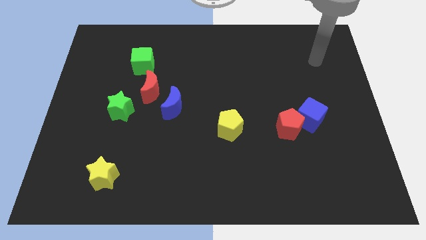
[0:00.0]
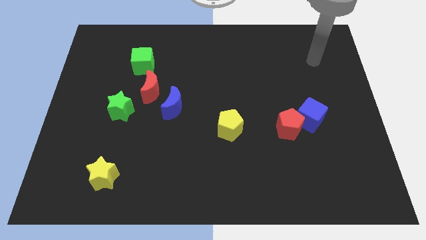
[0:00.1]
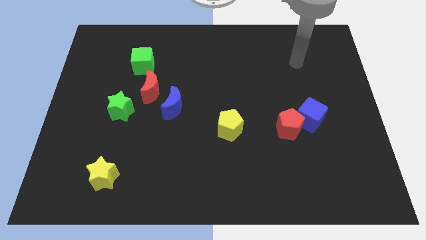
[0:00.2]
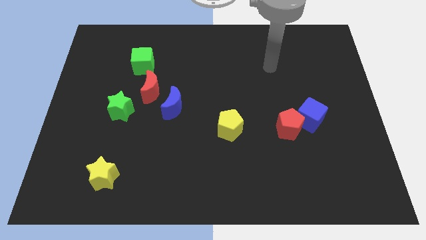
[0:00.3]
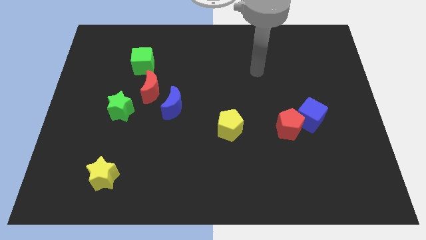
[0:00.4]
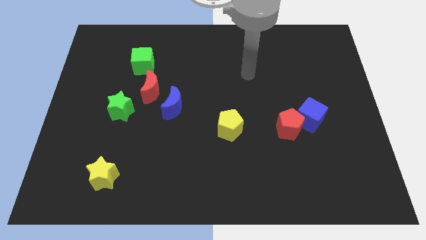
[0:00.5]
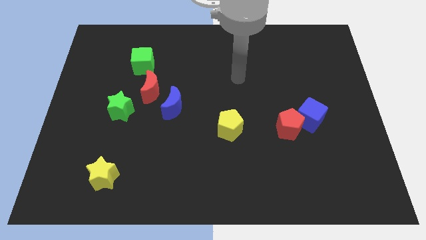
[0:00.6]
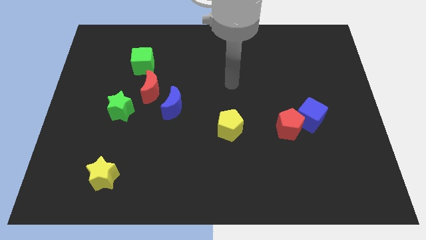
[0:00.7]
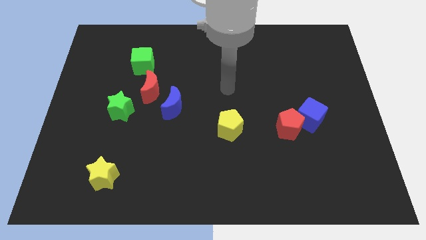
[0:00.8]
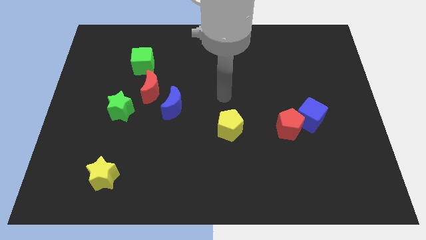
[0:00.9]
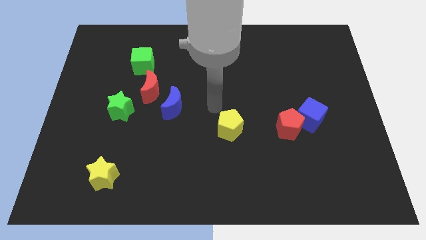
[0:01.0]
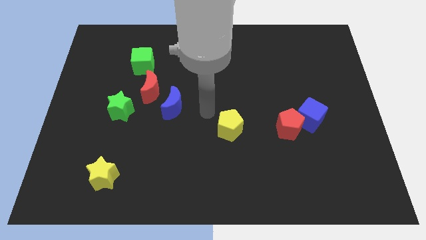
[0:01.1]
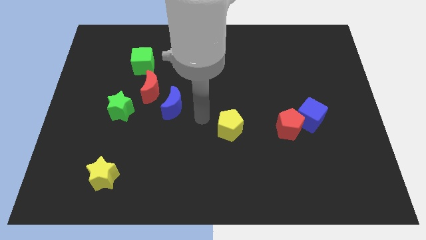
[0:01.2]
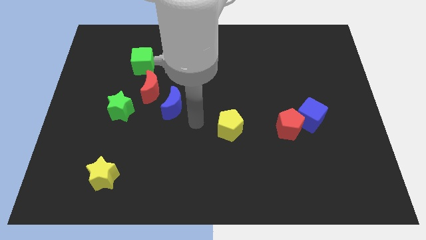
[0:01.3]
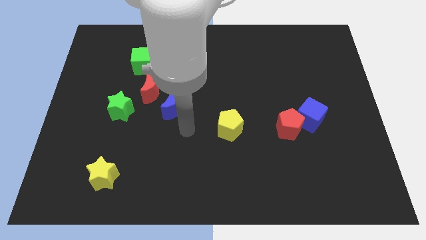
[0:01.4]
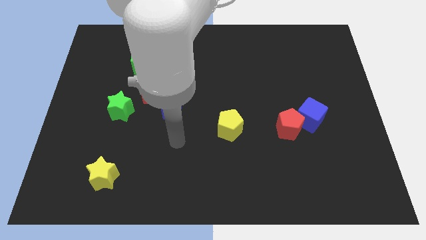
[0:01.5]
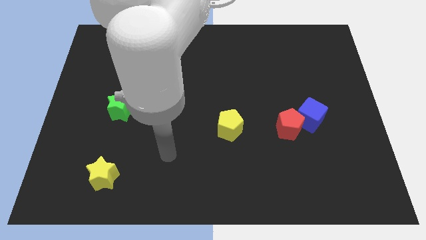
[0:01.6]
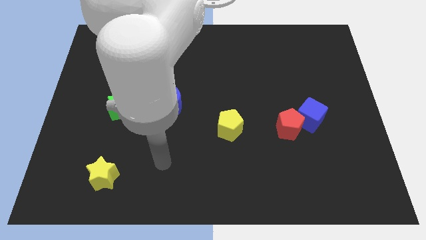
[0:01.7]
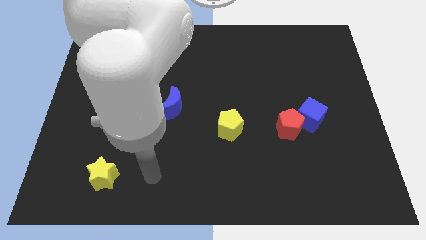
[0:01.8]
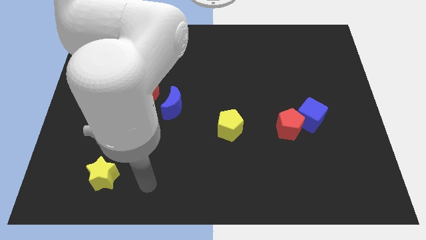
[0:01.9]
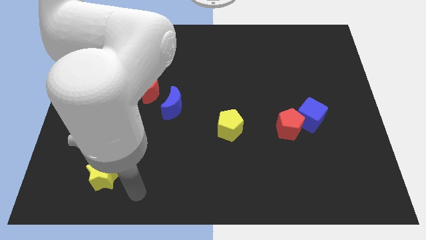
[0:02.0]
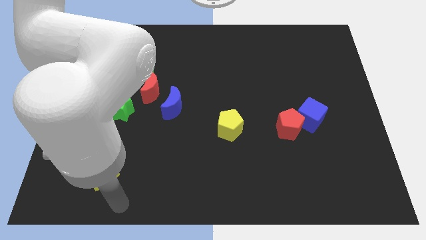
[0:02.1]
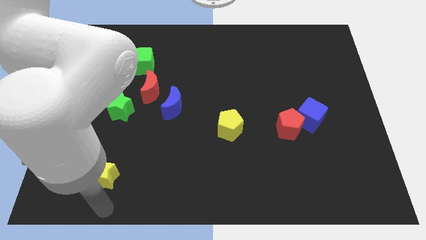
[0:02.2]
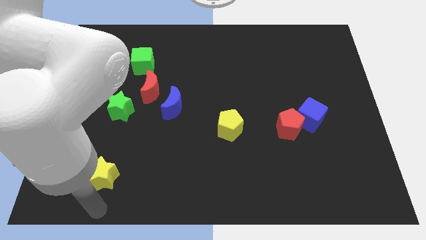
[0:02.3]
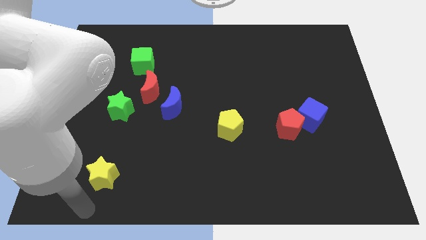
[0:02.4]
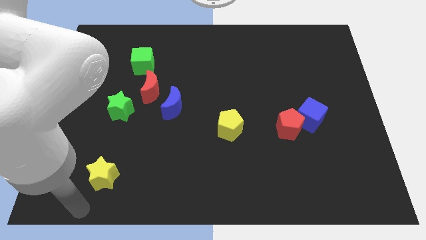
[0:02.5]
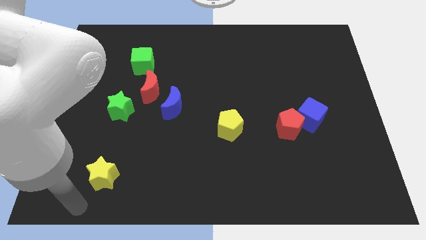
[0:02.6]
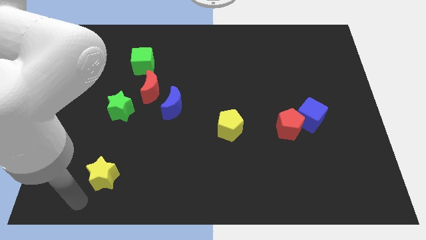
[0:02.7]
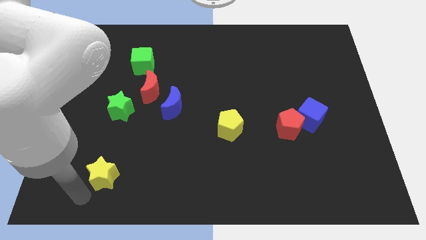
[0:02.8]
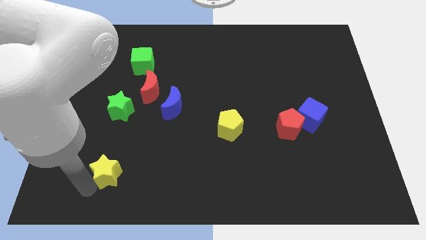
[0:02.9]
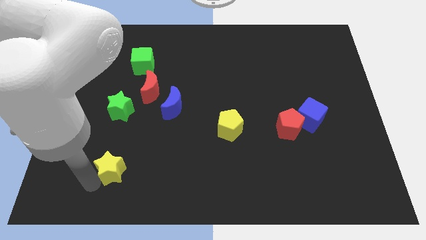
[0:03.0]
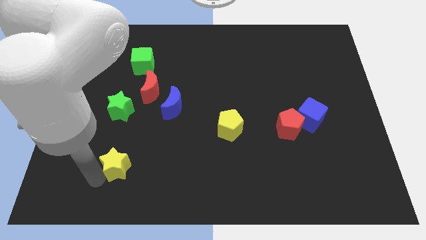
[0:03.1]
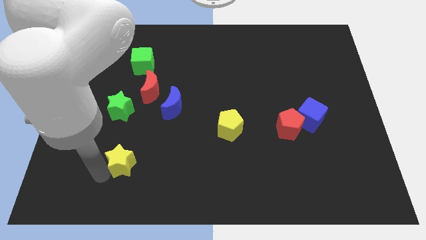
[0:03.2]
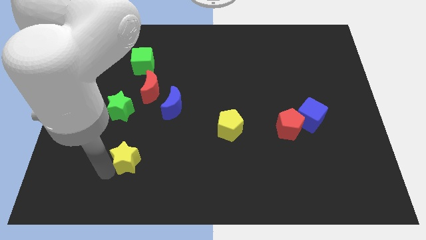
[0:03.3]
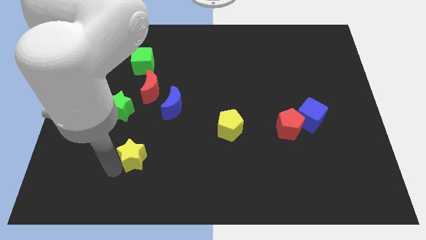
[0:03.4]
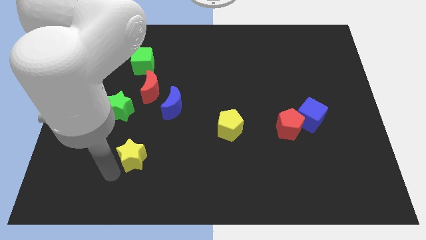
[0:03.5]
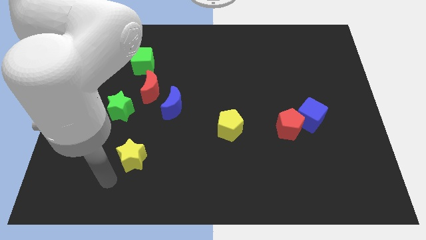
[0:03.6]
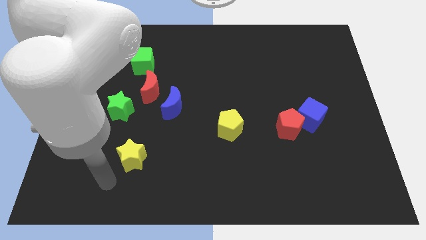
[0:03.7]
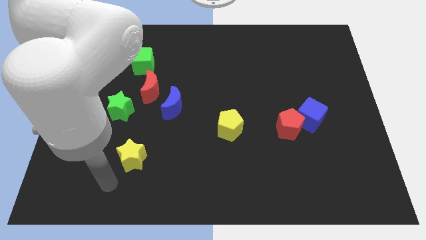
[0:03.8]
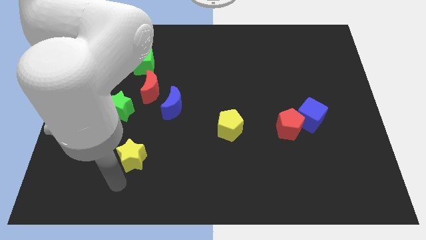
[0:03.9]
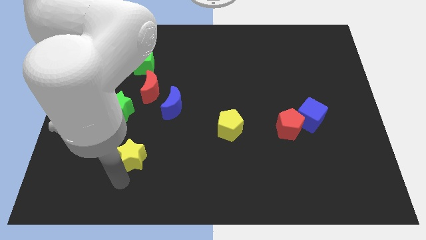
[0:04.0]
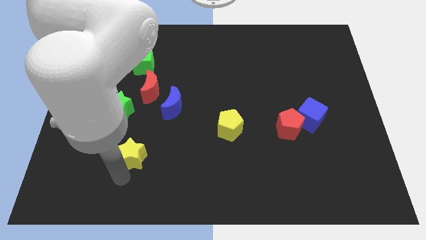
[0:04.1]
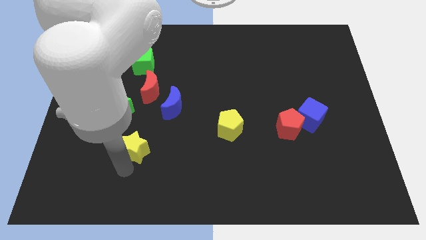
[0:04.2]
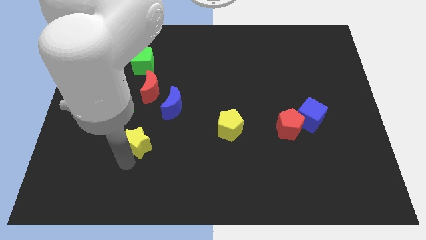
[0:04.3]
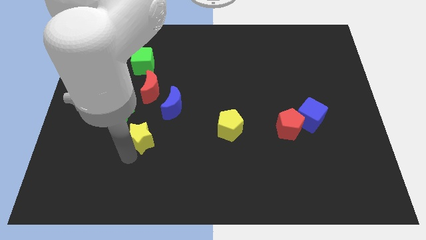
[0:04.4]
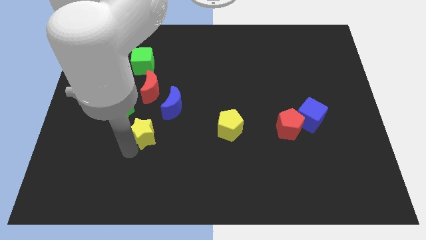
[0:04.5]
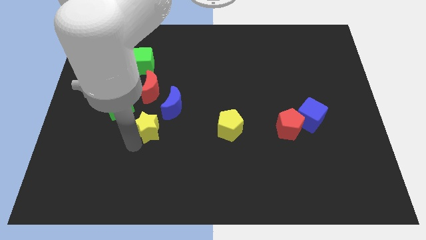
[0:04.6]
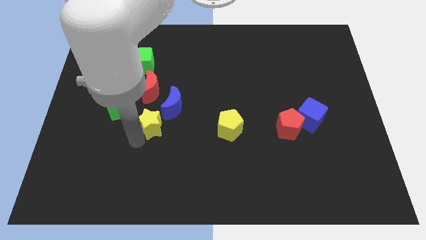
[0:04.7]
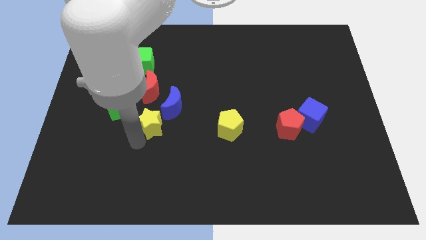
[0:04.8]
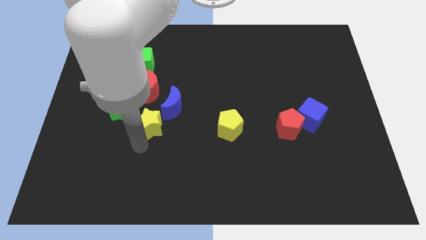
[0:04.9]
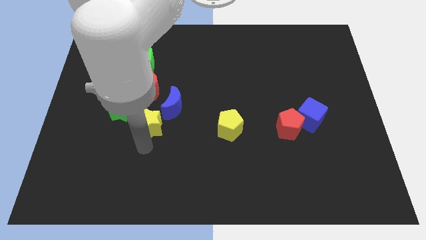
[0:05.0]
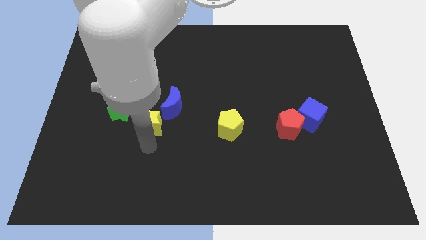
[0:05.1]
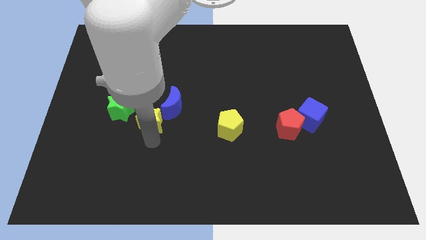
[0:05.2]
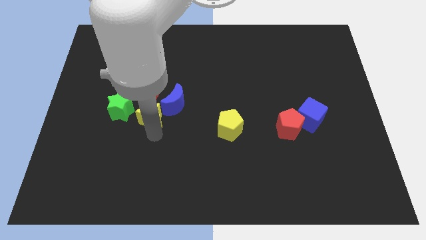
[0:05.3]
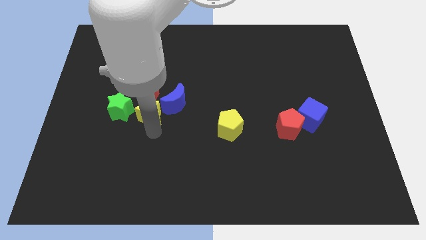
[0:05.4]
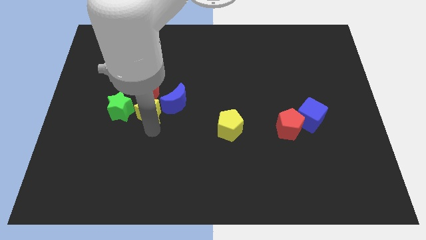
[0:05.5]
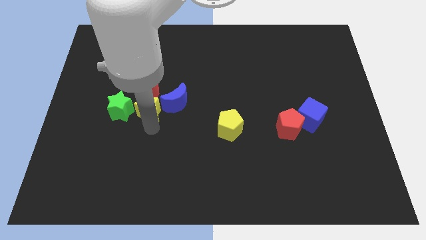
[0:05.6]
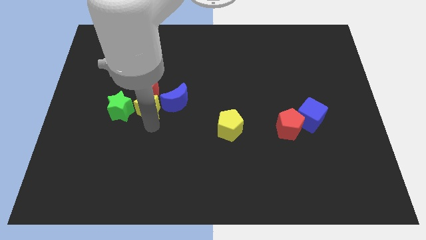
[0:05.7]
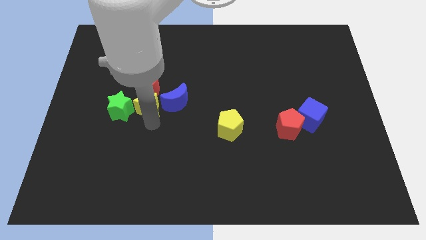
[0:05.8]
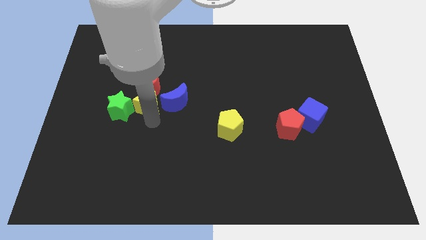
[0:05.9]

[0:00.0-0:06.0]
slide the yellow star close to the red moon

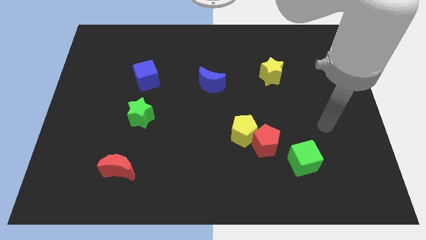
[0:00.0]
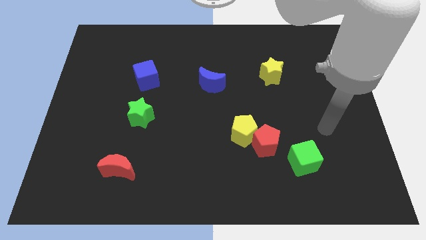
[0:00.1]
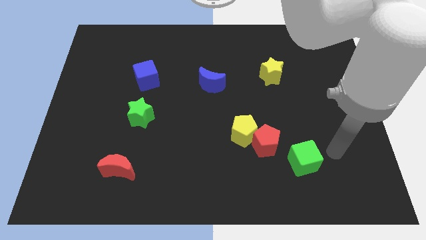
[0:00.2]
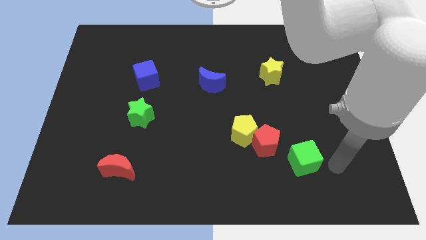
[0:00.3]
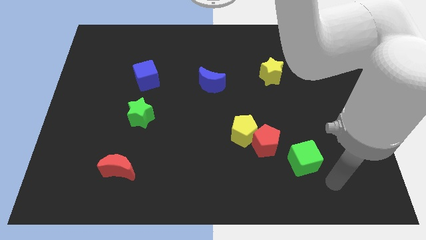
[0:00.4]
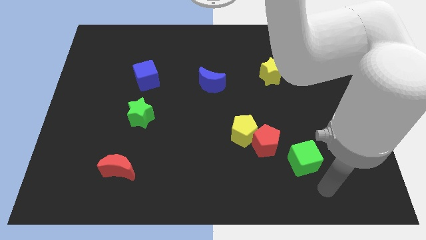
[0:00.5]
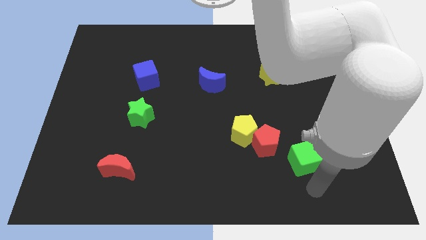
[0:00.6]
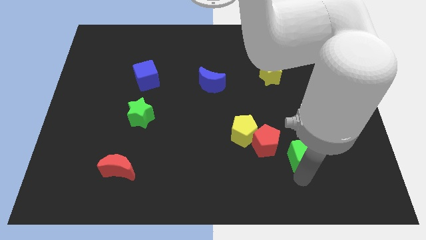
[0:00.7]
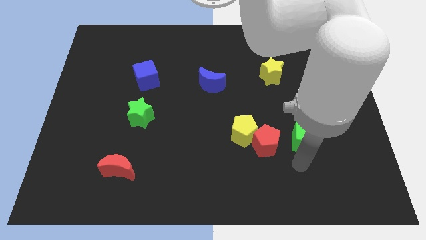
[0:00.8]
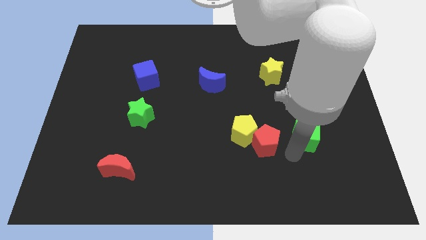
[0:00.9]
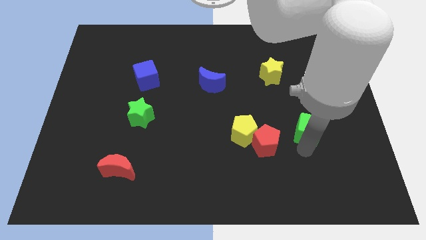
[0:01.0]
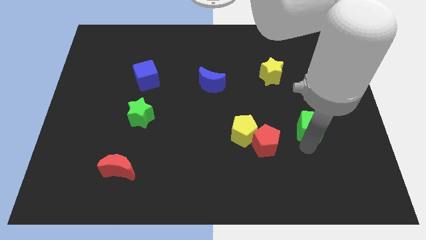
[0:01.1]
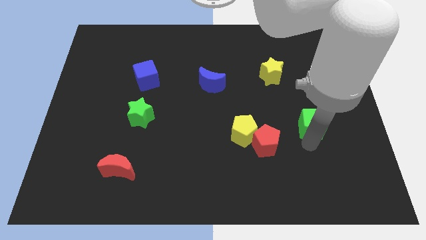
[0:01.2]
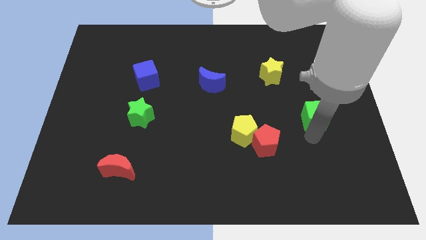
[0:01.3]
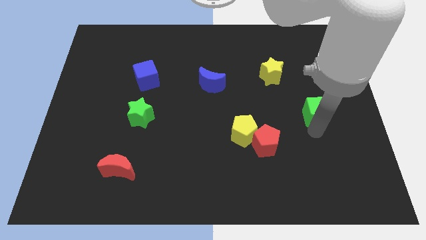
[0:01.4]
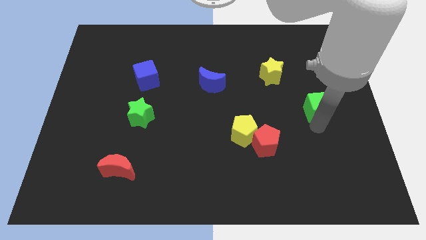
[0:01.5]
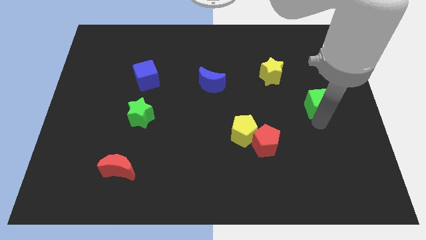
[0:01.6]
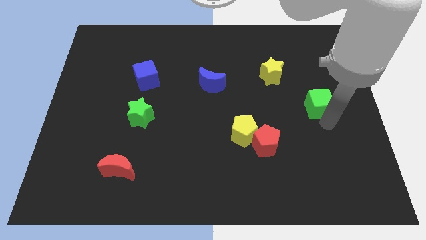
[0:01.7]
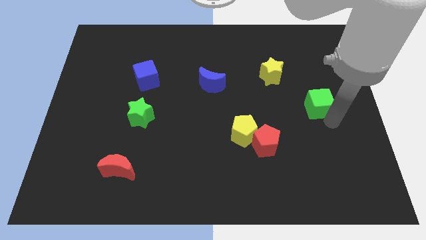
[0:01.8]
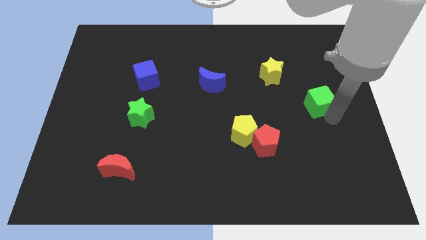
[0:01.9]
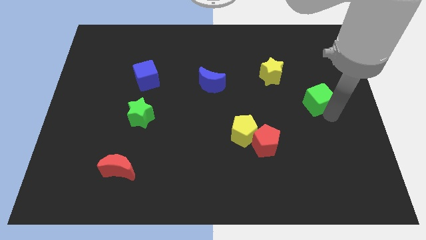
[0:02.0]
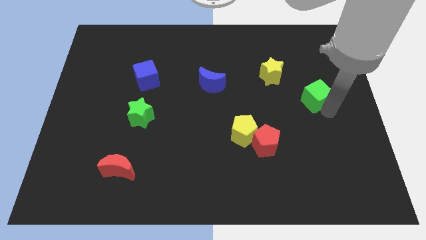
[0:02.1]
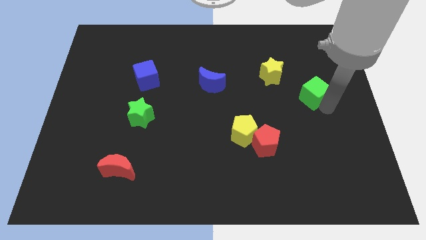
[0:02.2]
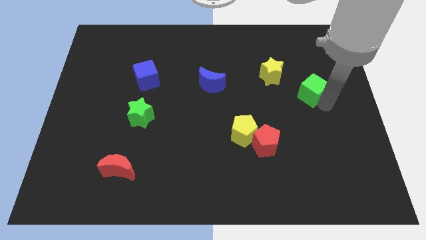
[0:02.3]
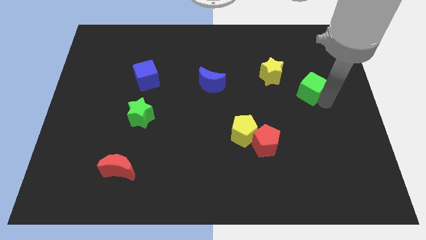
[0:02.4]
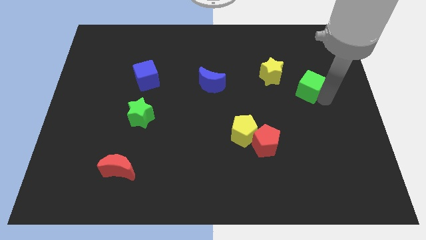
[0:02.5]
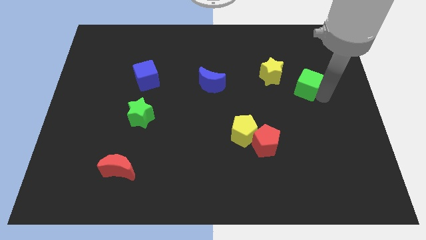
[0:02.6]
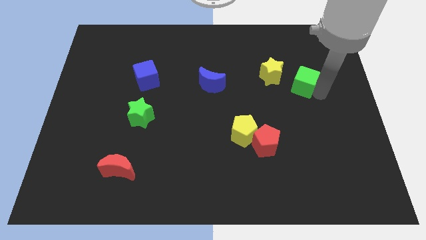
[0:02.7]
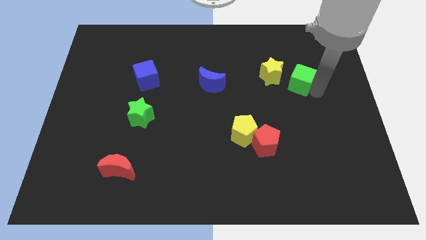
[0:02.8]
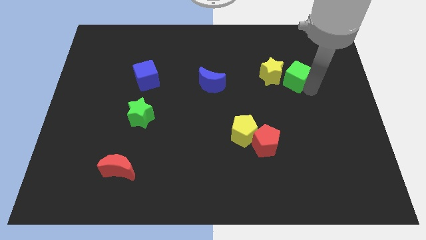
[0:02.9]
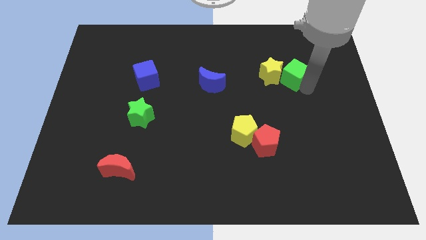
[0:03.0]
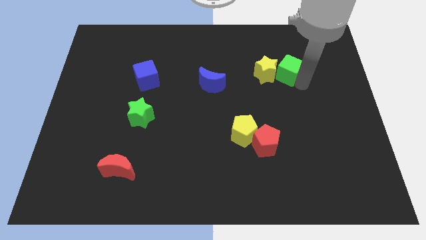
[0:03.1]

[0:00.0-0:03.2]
slide the green cube to the yellow star
